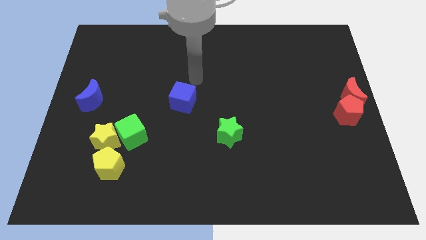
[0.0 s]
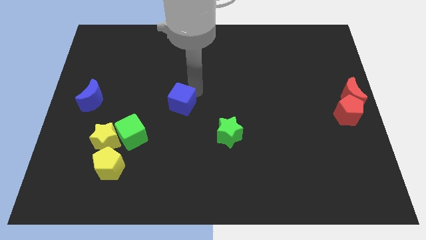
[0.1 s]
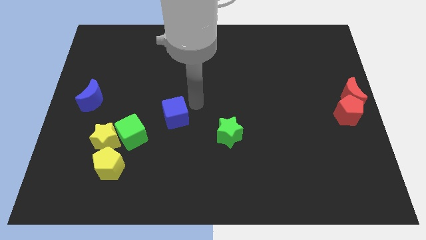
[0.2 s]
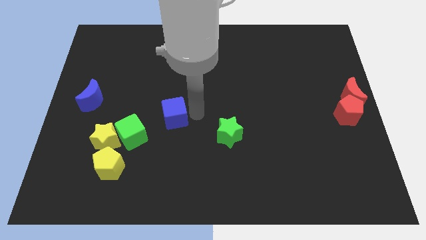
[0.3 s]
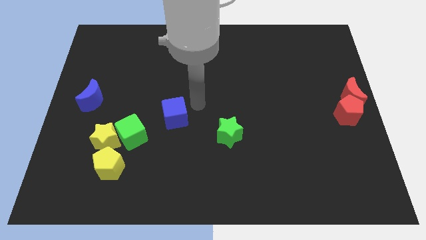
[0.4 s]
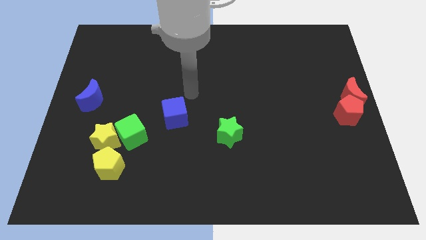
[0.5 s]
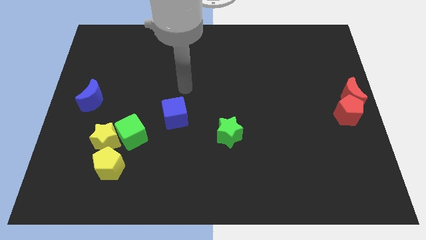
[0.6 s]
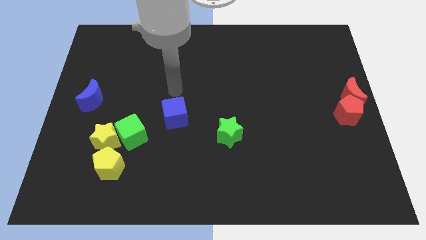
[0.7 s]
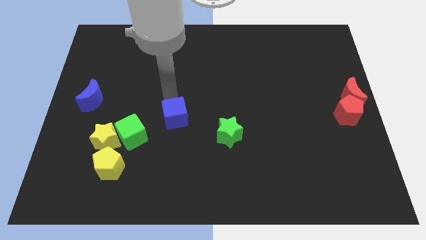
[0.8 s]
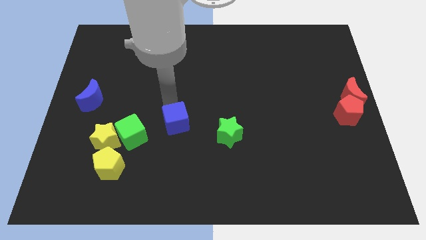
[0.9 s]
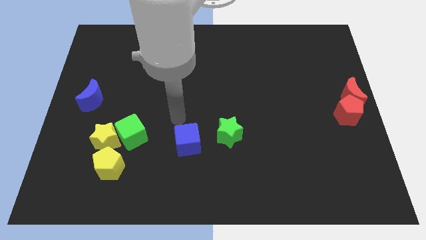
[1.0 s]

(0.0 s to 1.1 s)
place the blue cube to the left of the green star

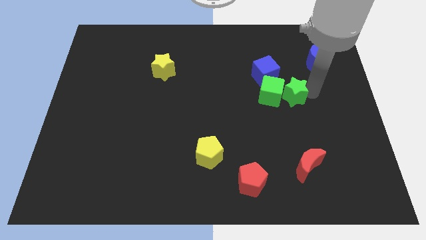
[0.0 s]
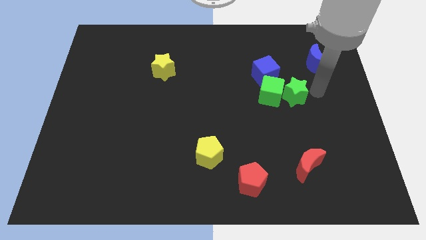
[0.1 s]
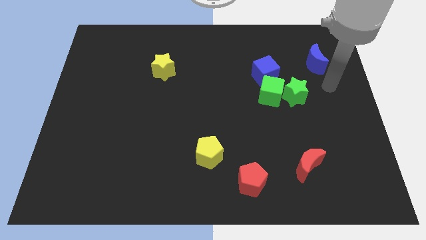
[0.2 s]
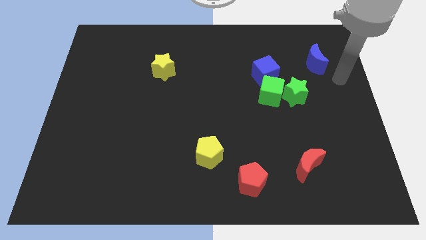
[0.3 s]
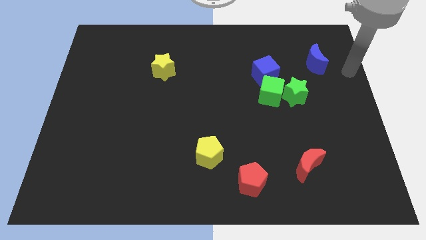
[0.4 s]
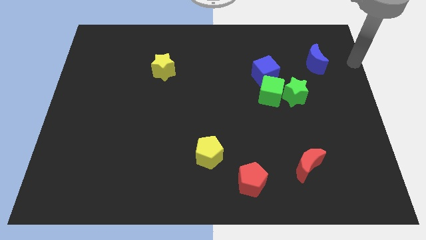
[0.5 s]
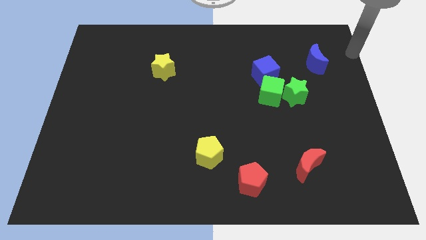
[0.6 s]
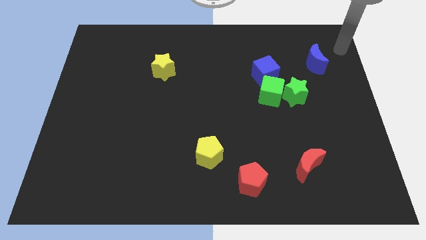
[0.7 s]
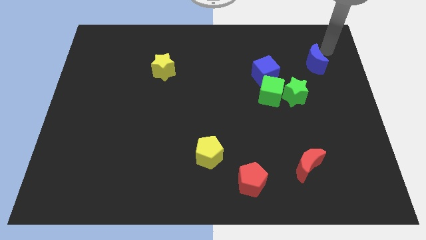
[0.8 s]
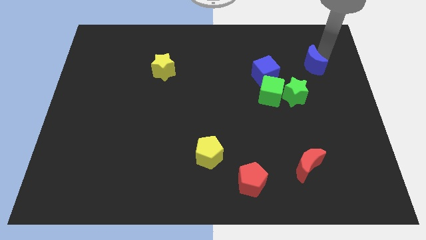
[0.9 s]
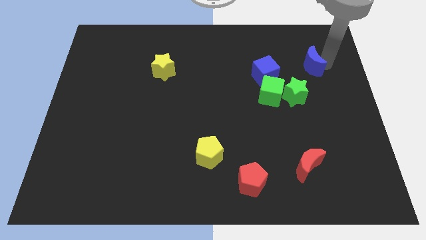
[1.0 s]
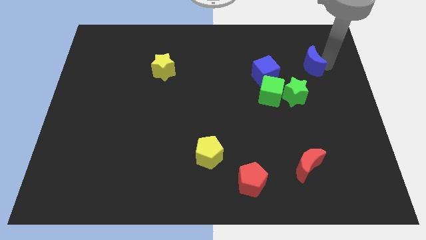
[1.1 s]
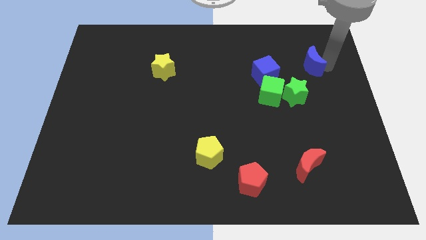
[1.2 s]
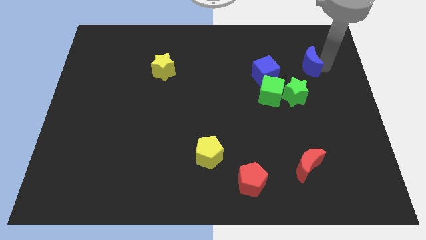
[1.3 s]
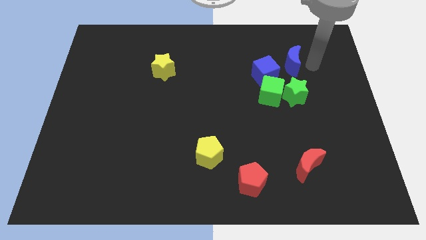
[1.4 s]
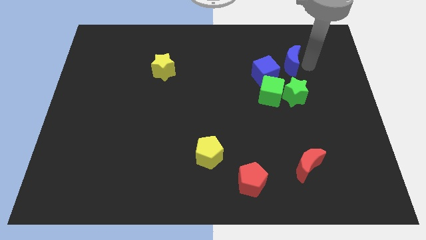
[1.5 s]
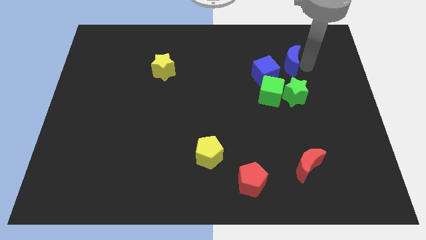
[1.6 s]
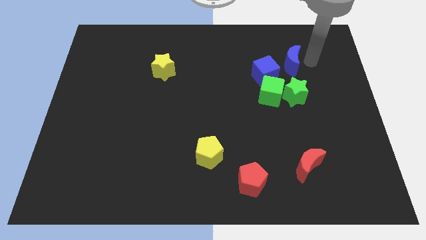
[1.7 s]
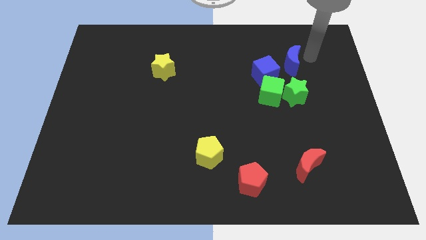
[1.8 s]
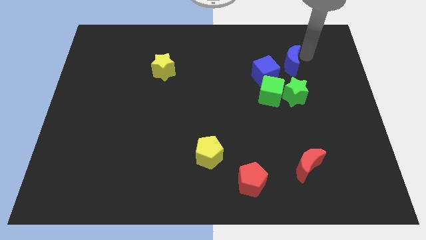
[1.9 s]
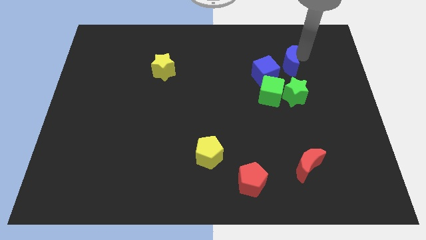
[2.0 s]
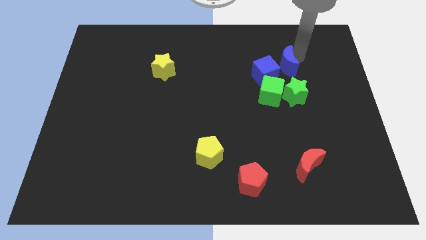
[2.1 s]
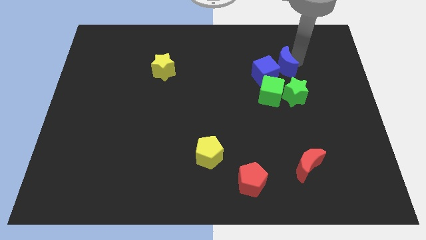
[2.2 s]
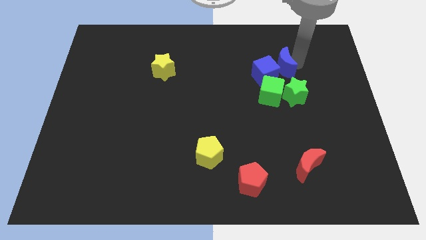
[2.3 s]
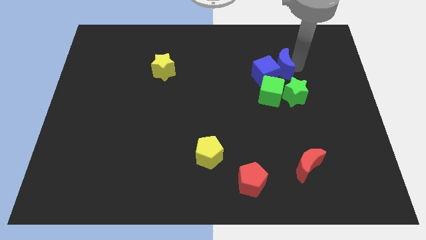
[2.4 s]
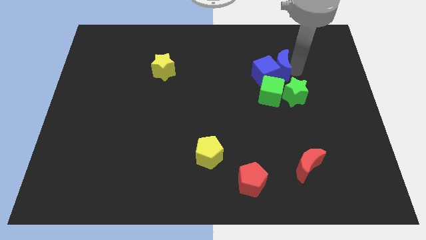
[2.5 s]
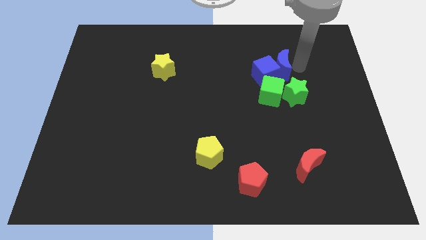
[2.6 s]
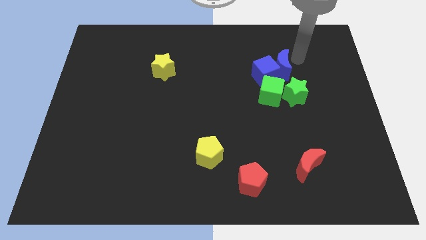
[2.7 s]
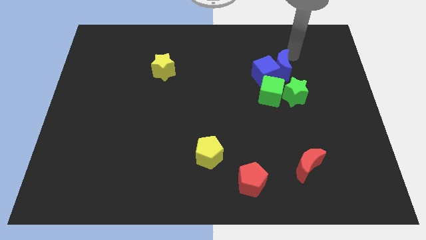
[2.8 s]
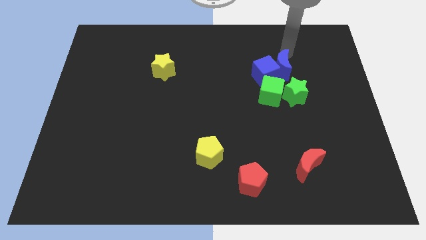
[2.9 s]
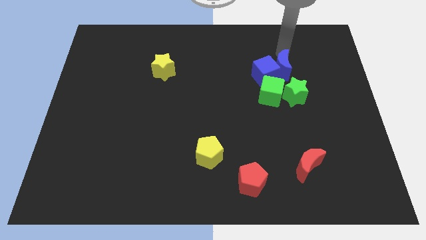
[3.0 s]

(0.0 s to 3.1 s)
slide blue moon into blue cube

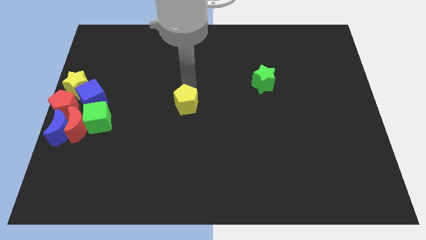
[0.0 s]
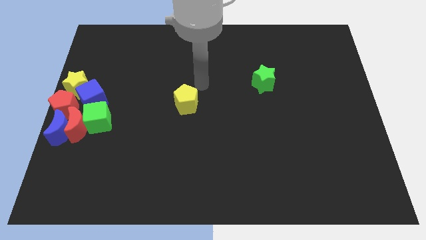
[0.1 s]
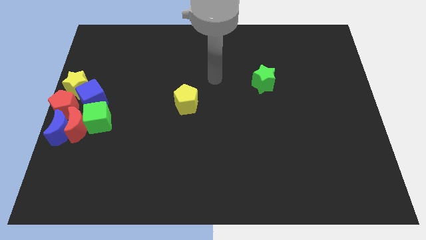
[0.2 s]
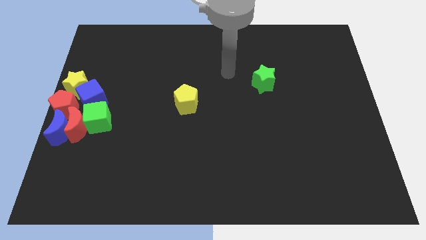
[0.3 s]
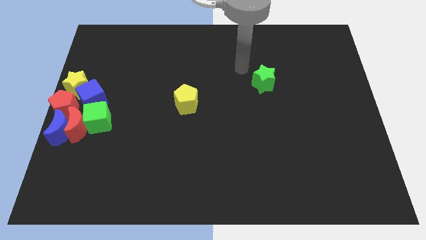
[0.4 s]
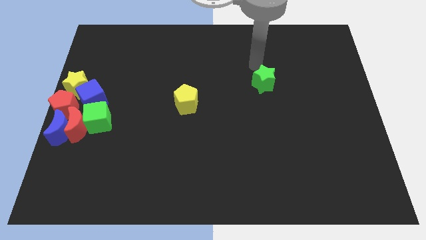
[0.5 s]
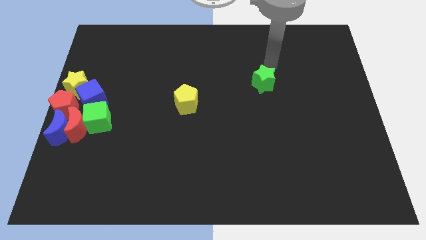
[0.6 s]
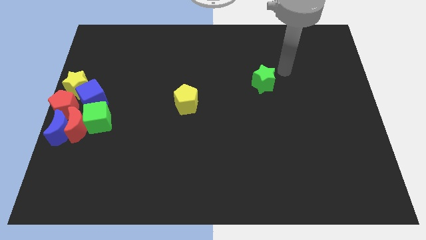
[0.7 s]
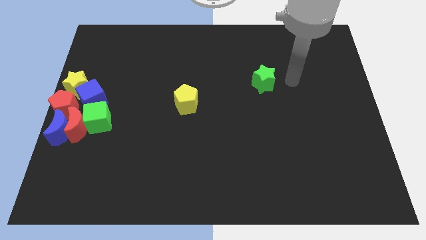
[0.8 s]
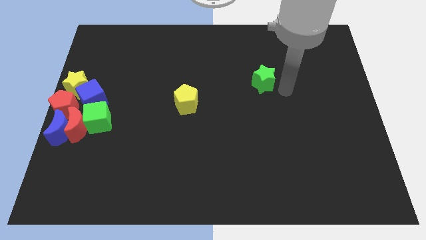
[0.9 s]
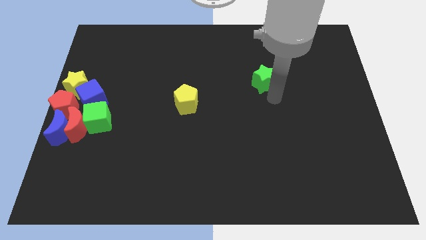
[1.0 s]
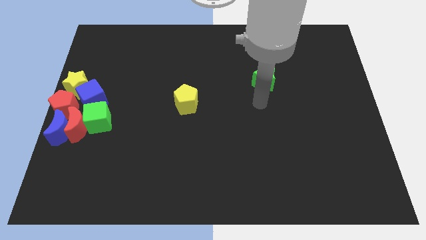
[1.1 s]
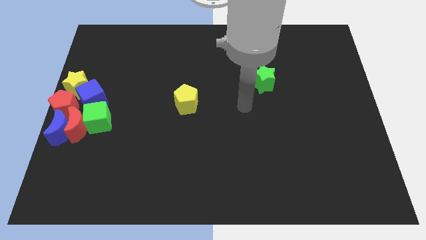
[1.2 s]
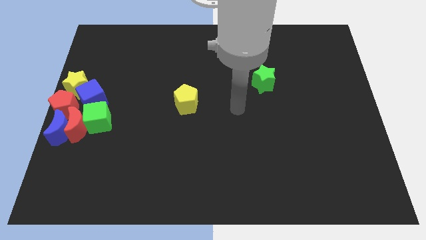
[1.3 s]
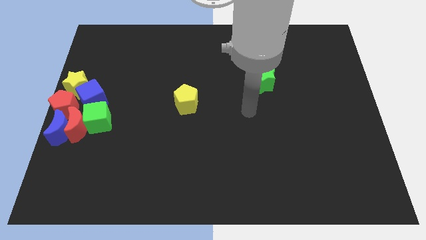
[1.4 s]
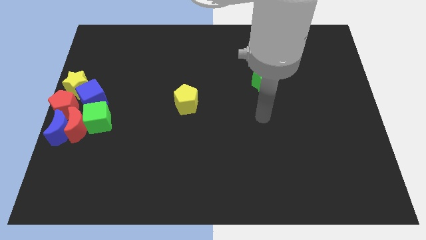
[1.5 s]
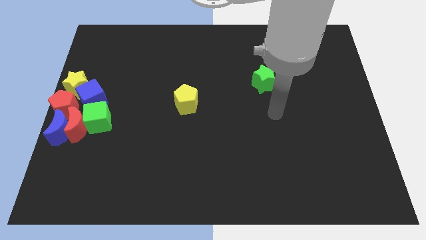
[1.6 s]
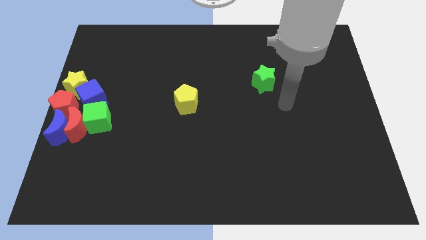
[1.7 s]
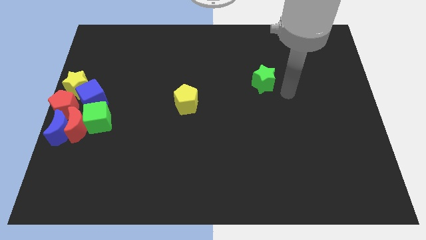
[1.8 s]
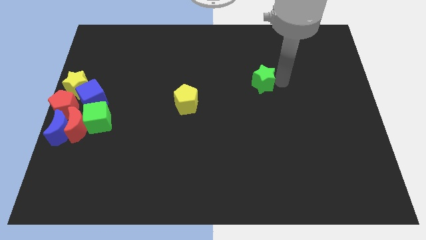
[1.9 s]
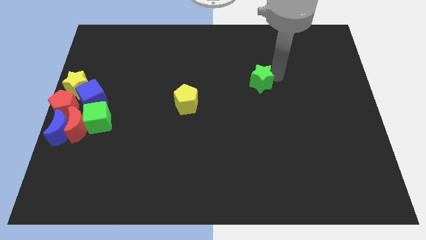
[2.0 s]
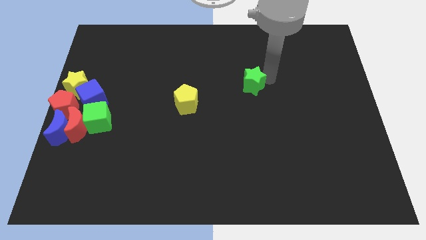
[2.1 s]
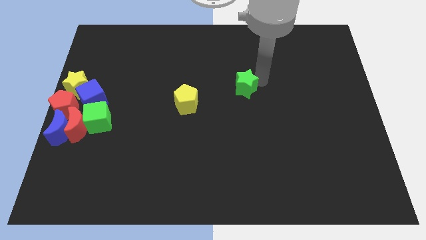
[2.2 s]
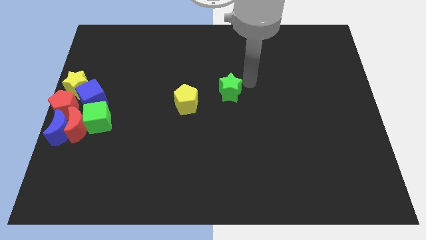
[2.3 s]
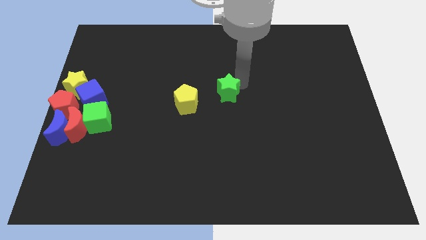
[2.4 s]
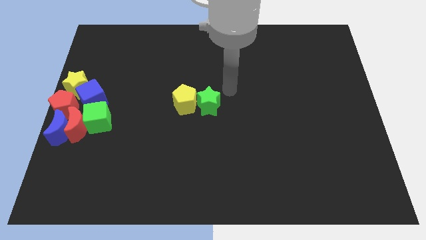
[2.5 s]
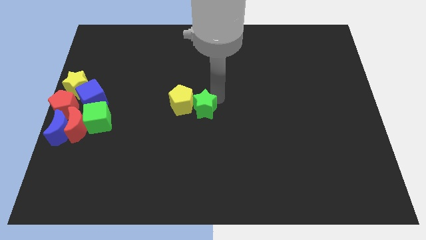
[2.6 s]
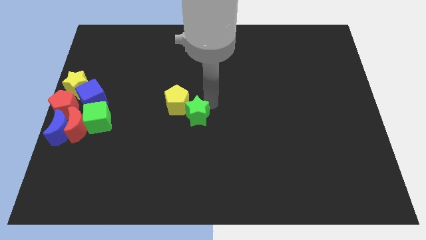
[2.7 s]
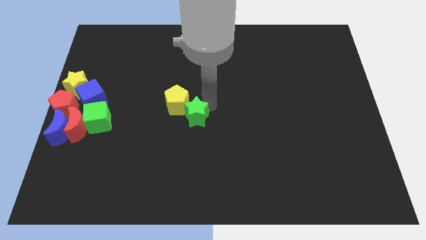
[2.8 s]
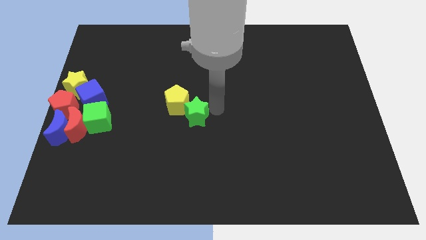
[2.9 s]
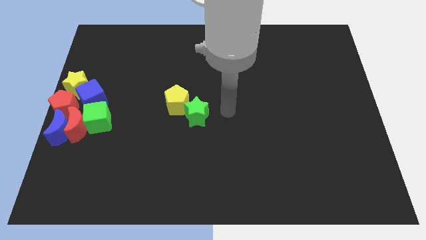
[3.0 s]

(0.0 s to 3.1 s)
put the green star diagonal into yellow pentagon

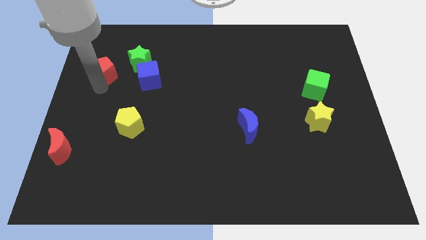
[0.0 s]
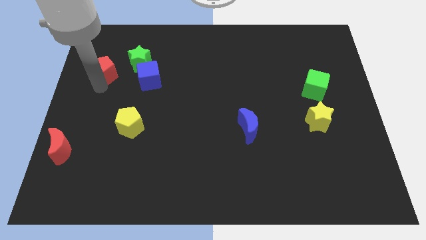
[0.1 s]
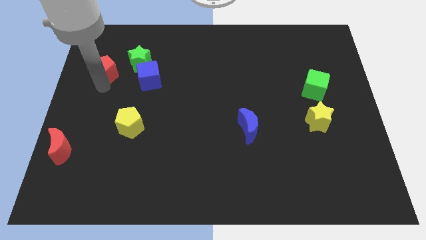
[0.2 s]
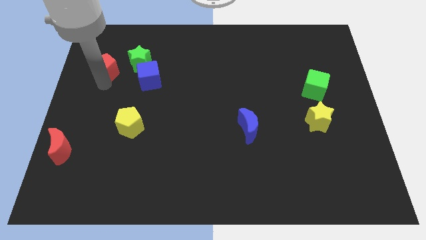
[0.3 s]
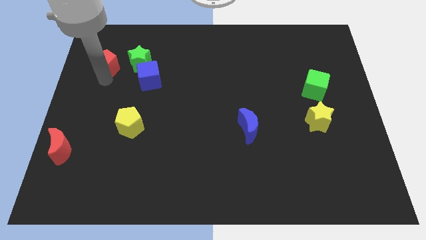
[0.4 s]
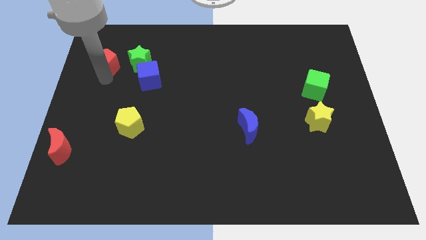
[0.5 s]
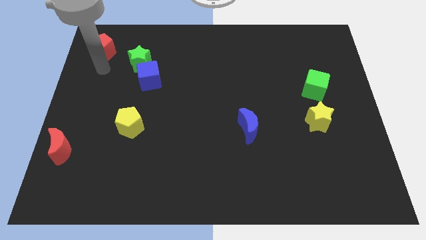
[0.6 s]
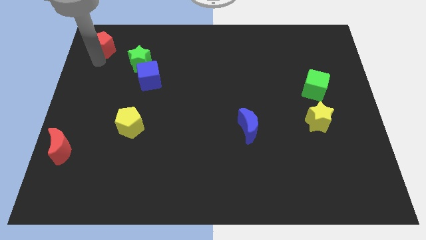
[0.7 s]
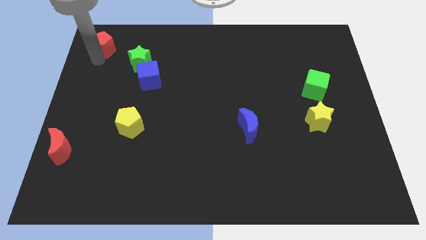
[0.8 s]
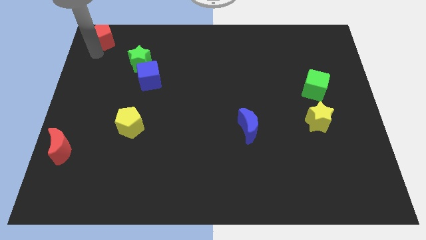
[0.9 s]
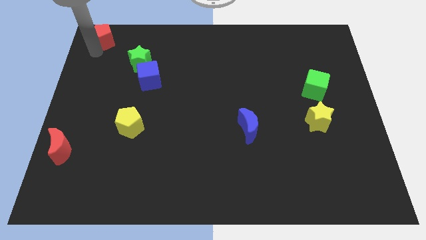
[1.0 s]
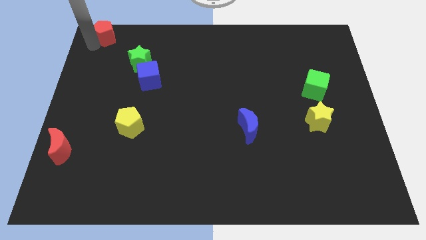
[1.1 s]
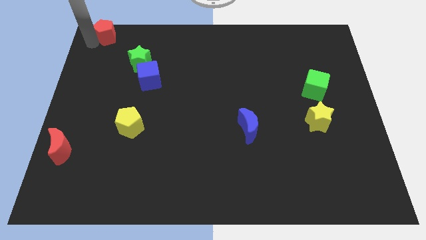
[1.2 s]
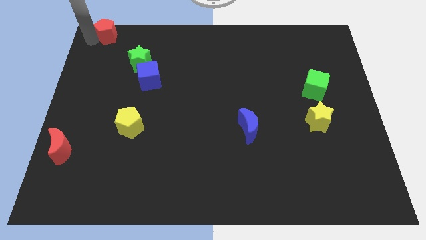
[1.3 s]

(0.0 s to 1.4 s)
push the red pentagon to the top left of the board

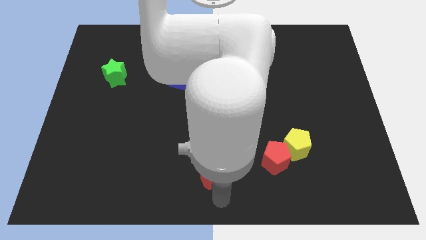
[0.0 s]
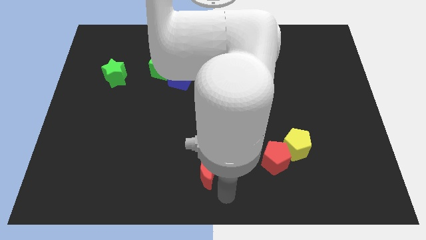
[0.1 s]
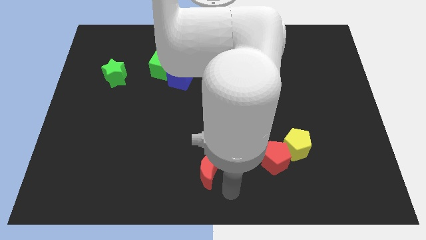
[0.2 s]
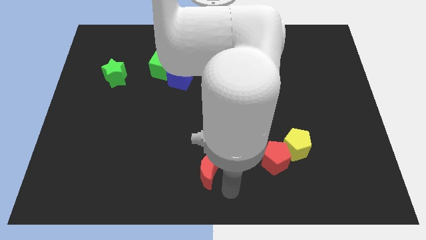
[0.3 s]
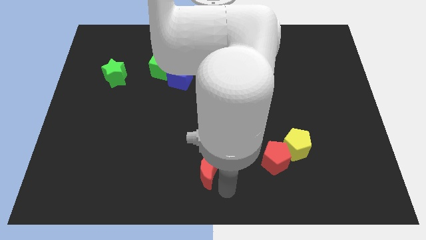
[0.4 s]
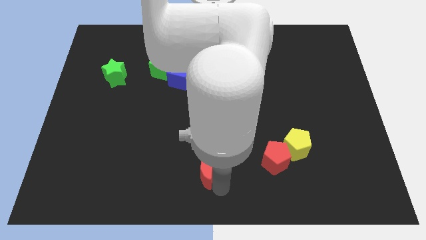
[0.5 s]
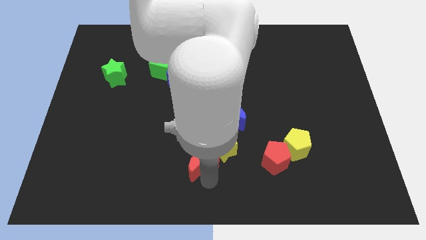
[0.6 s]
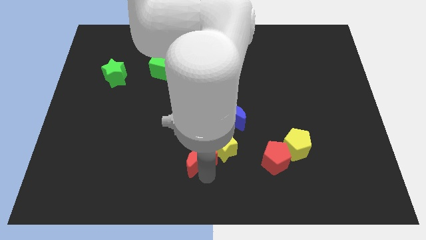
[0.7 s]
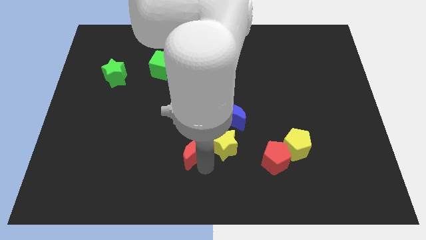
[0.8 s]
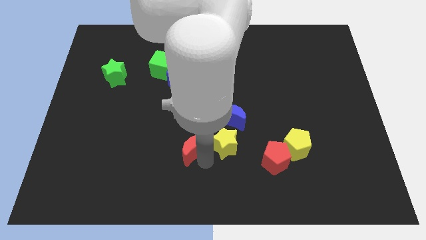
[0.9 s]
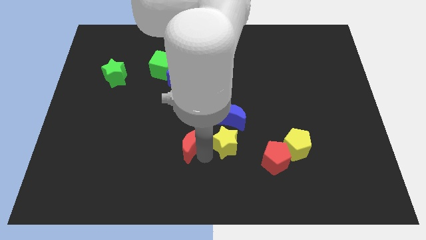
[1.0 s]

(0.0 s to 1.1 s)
slide red moon to the left of yellow star
